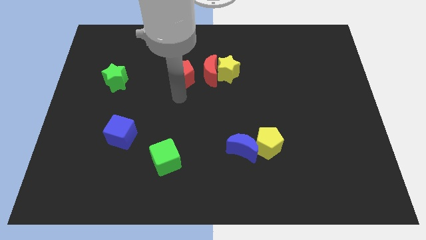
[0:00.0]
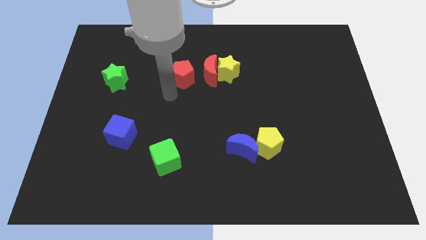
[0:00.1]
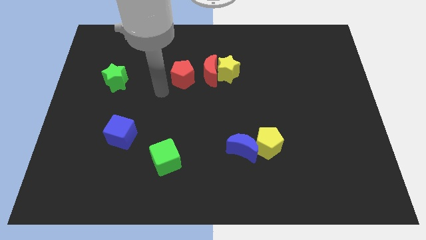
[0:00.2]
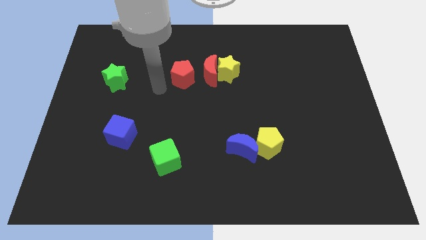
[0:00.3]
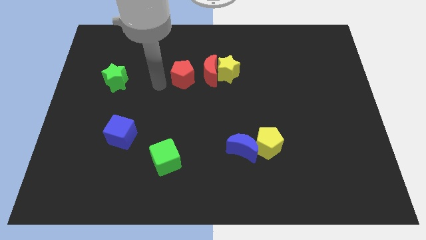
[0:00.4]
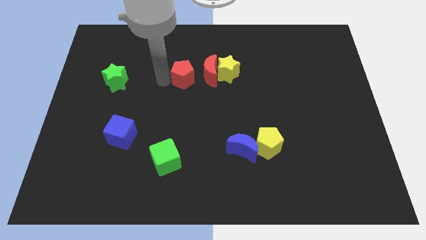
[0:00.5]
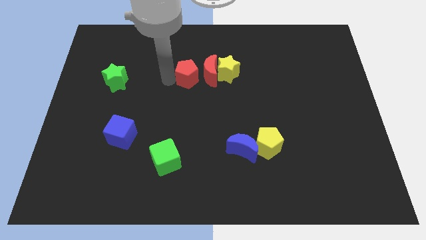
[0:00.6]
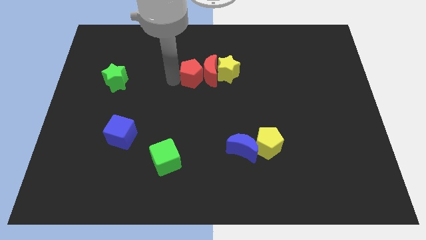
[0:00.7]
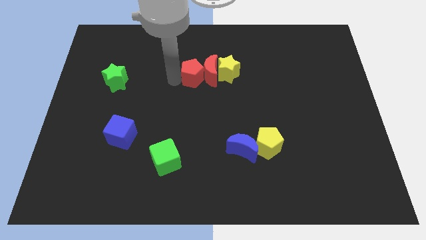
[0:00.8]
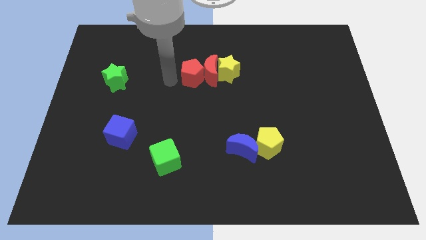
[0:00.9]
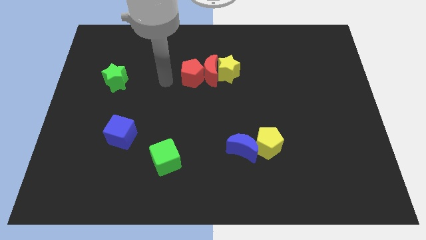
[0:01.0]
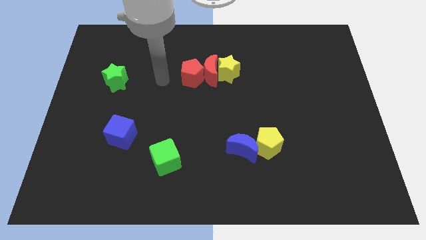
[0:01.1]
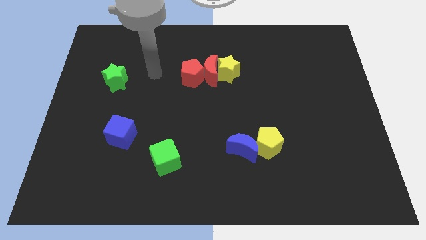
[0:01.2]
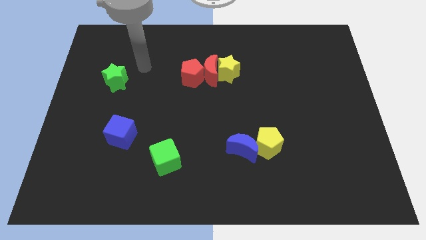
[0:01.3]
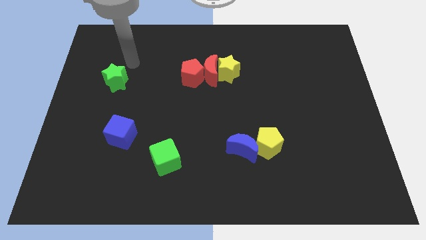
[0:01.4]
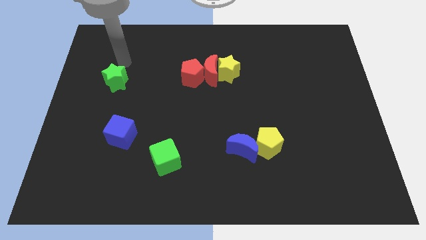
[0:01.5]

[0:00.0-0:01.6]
push the red pentagon into red moon

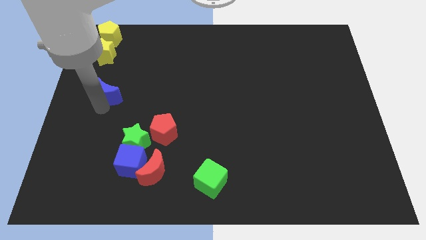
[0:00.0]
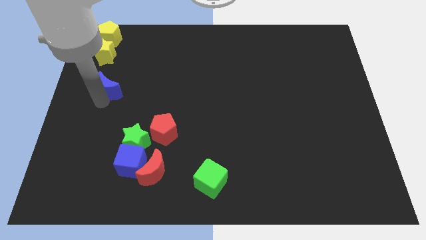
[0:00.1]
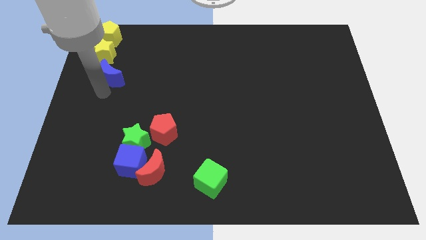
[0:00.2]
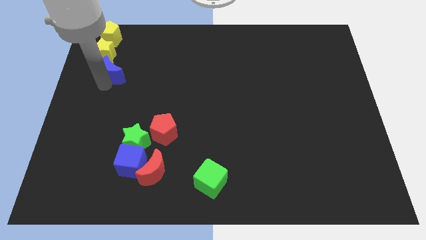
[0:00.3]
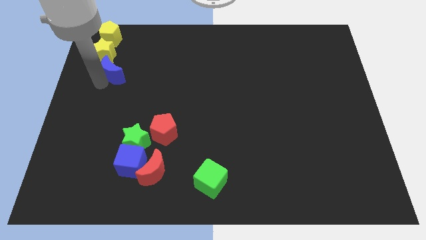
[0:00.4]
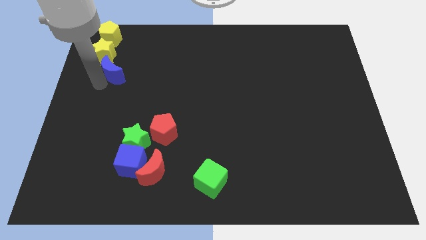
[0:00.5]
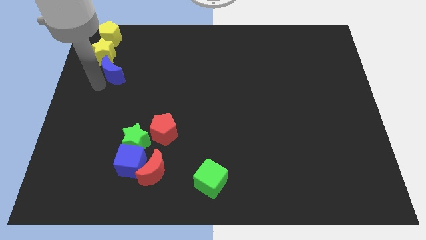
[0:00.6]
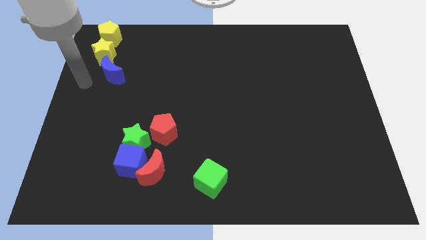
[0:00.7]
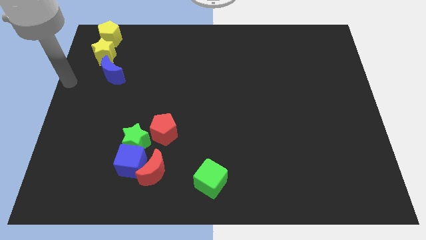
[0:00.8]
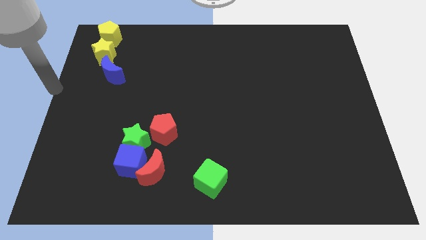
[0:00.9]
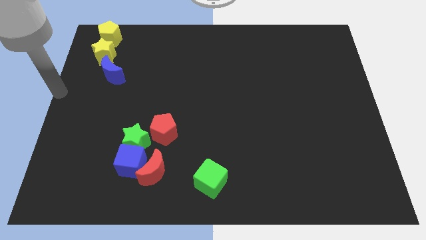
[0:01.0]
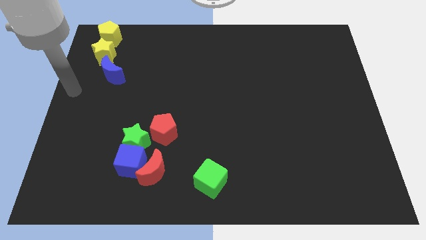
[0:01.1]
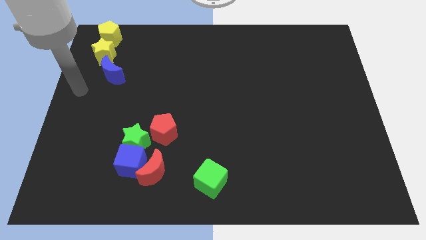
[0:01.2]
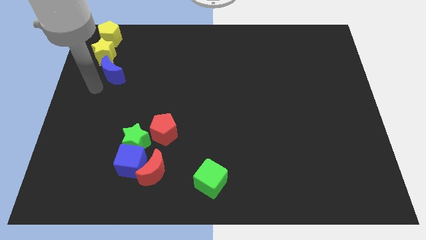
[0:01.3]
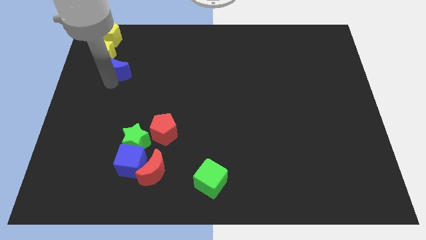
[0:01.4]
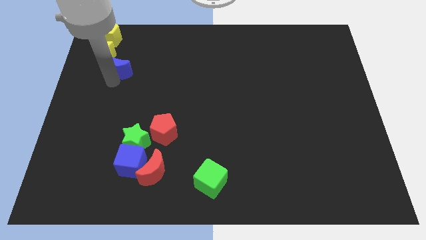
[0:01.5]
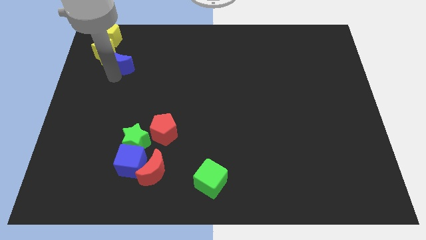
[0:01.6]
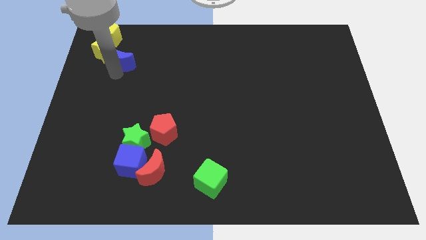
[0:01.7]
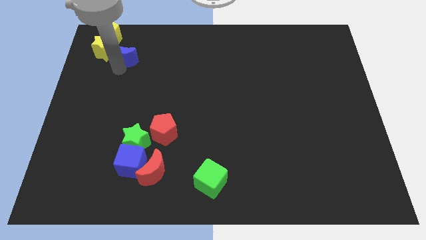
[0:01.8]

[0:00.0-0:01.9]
put the blue moon diagonally right to the yellow star

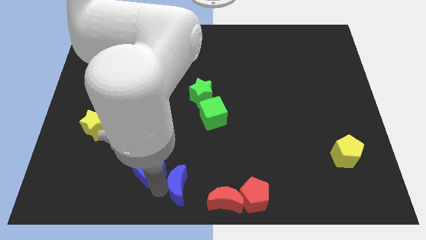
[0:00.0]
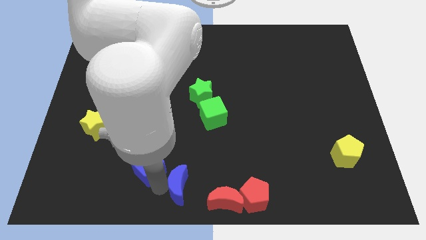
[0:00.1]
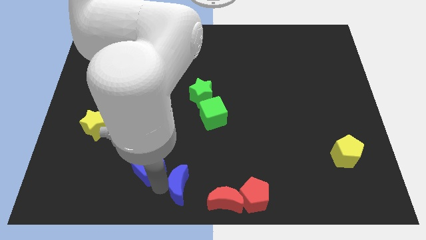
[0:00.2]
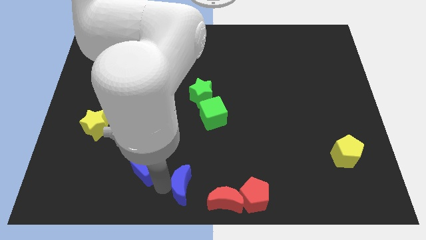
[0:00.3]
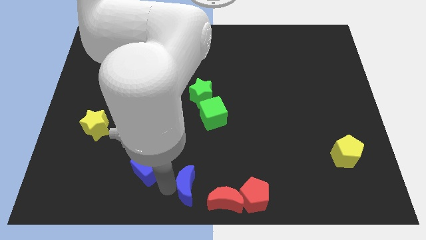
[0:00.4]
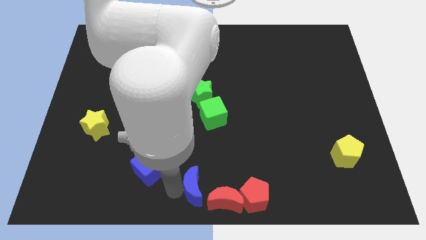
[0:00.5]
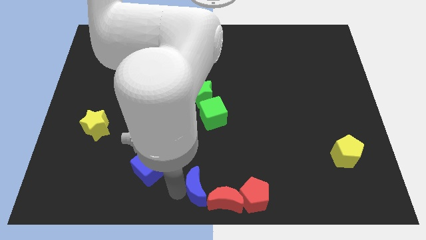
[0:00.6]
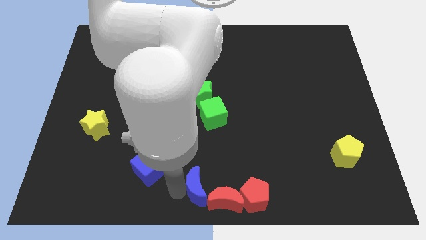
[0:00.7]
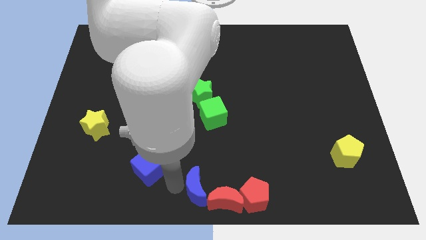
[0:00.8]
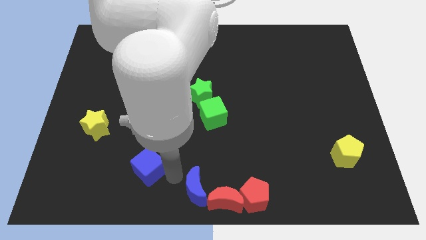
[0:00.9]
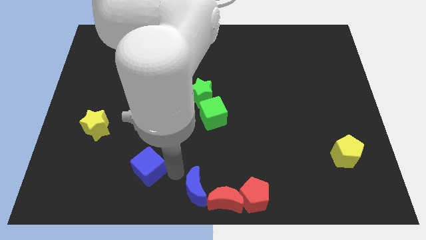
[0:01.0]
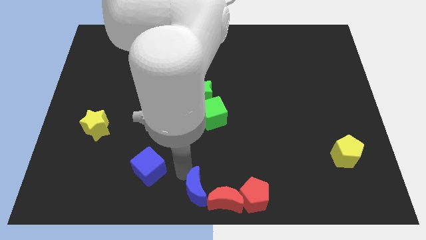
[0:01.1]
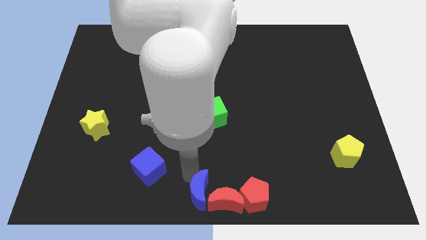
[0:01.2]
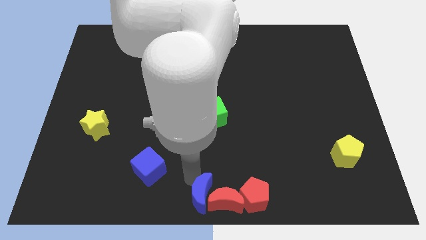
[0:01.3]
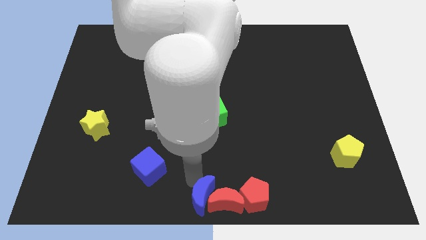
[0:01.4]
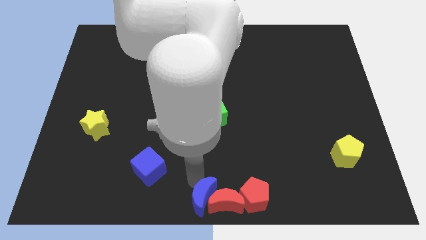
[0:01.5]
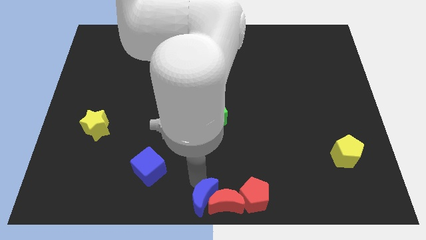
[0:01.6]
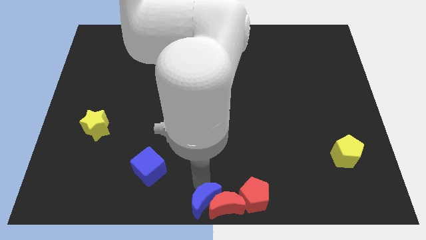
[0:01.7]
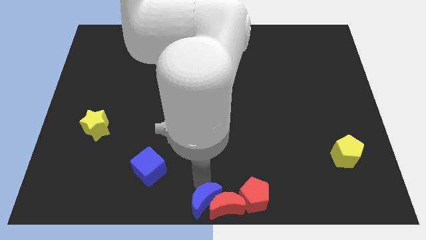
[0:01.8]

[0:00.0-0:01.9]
push the blue crescent towards the left side of the red crescent

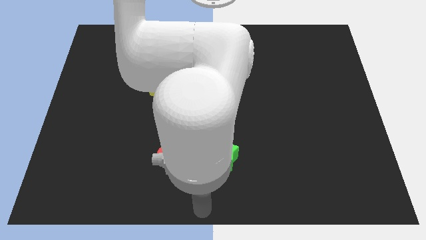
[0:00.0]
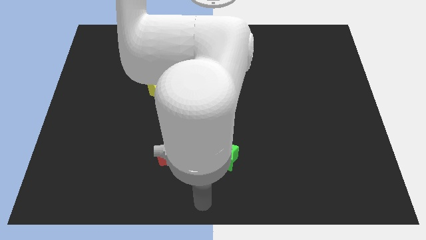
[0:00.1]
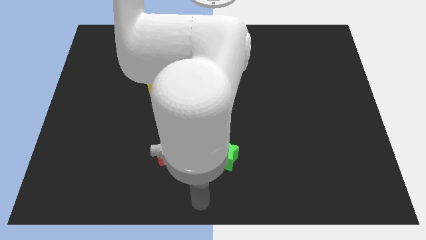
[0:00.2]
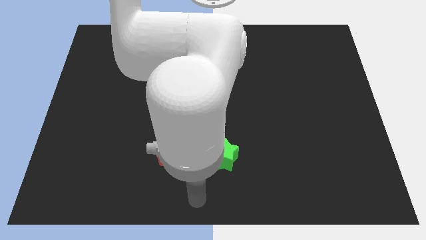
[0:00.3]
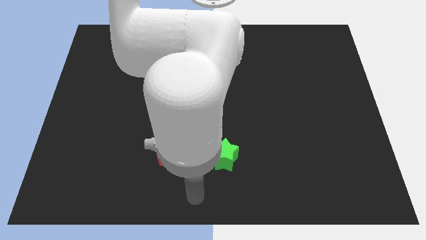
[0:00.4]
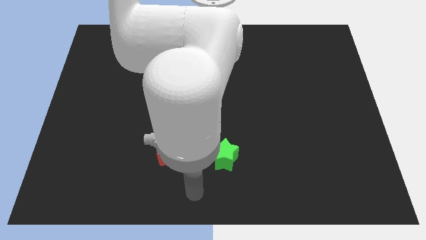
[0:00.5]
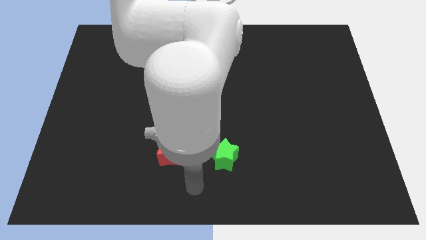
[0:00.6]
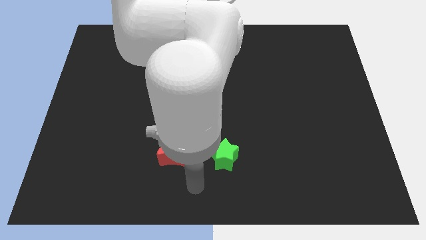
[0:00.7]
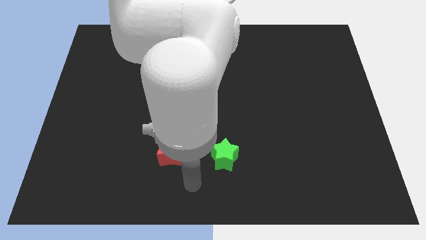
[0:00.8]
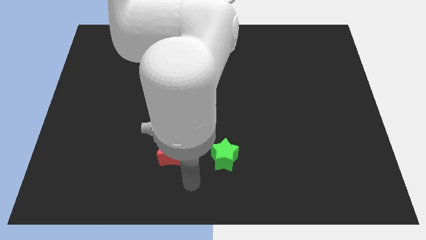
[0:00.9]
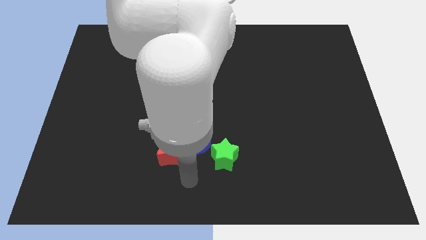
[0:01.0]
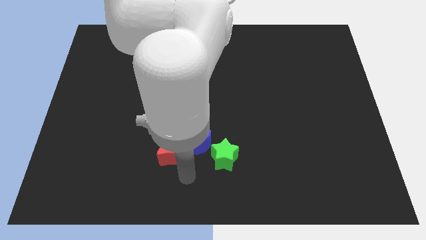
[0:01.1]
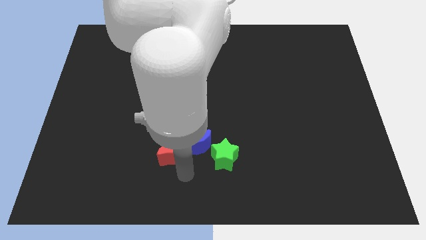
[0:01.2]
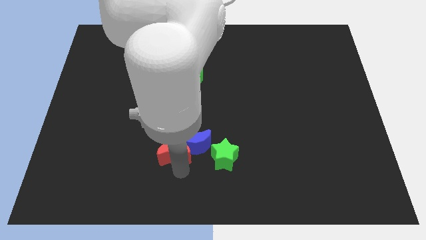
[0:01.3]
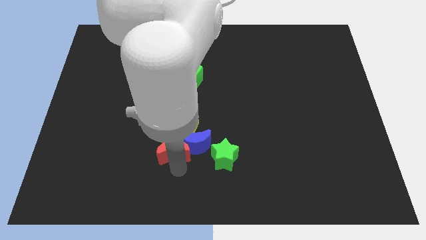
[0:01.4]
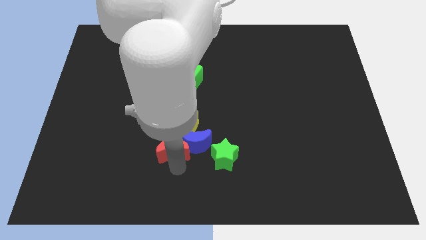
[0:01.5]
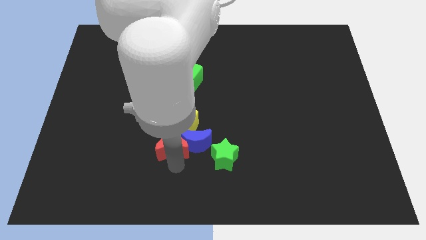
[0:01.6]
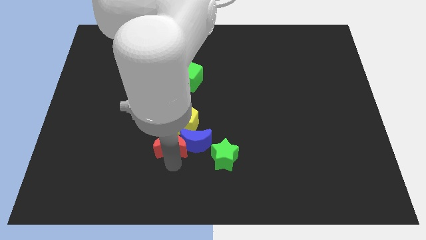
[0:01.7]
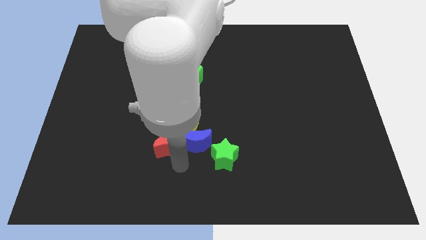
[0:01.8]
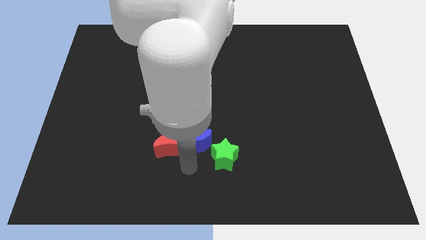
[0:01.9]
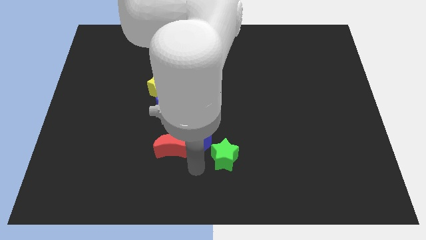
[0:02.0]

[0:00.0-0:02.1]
slightly push the red moon towards up

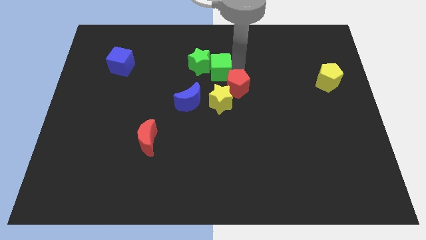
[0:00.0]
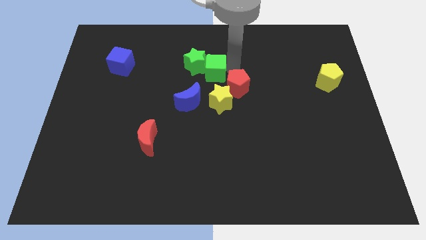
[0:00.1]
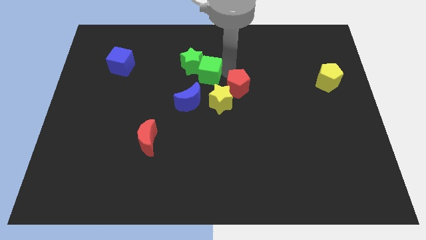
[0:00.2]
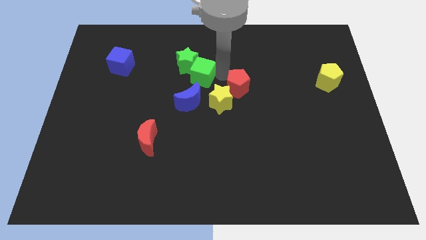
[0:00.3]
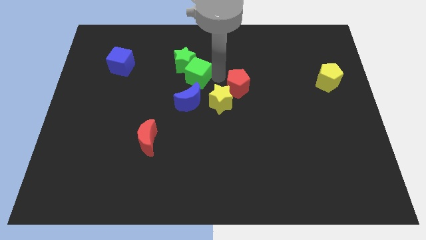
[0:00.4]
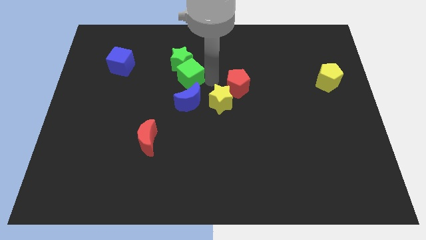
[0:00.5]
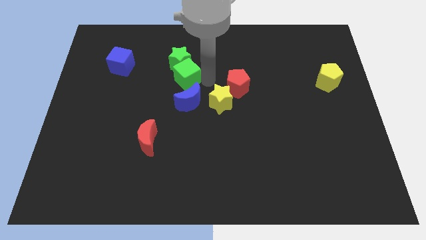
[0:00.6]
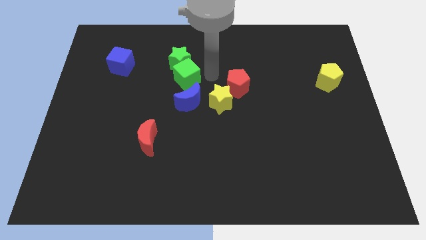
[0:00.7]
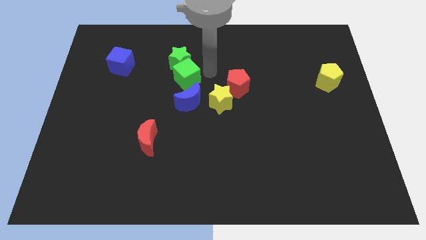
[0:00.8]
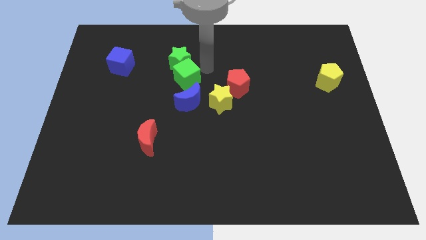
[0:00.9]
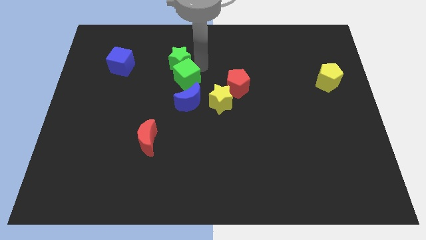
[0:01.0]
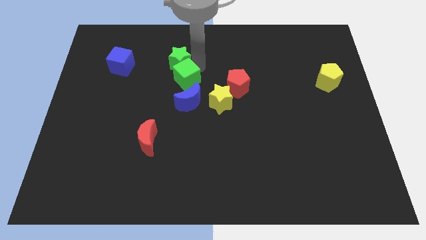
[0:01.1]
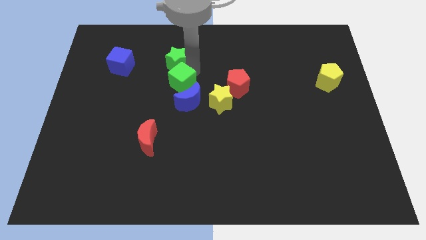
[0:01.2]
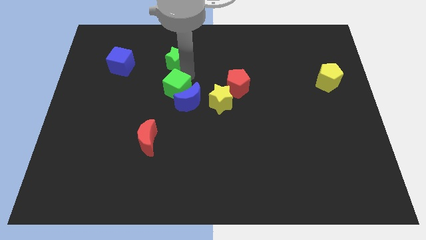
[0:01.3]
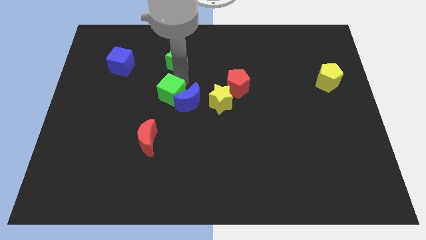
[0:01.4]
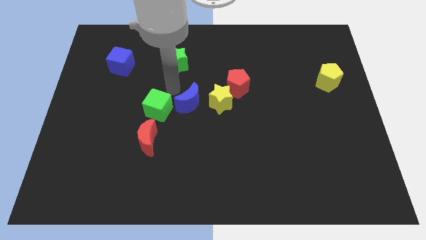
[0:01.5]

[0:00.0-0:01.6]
place green cube to the top of red moon
